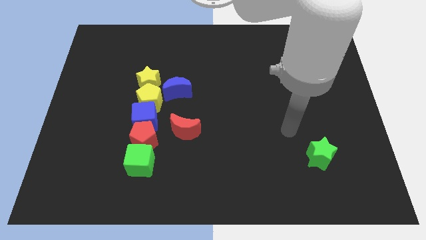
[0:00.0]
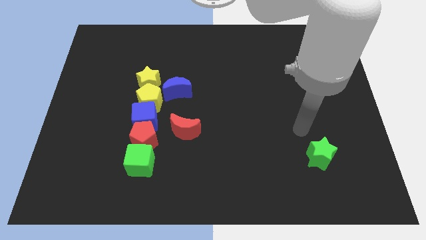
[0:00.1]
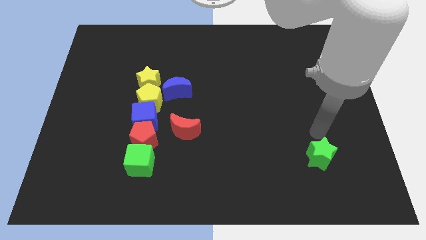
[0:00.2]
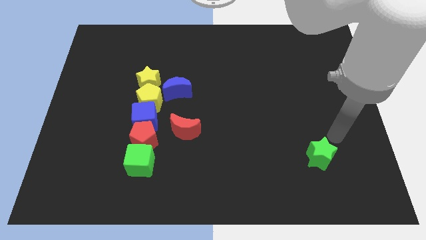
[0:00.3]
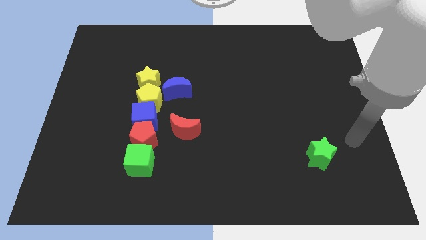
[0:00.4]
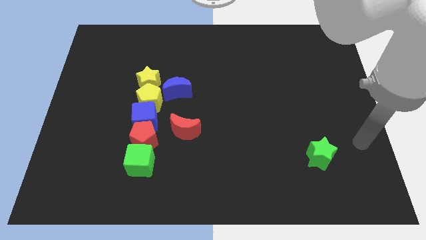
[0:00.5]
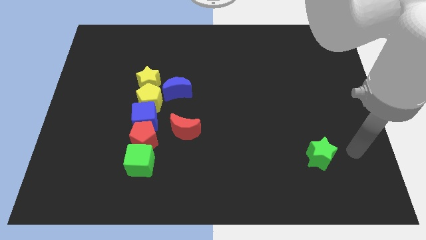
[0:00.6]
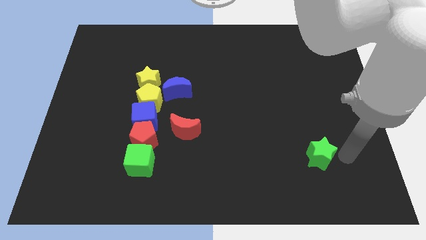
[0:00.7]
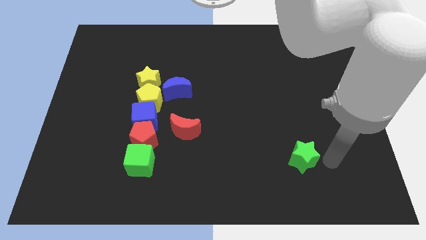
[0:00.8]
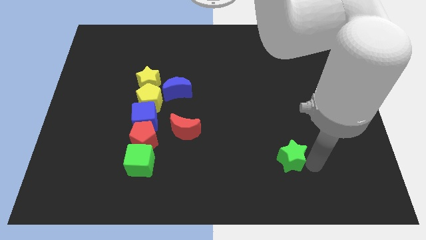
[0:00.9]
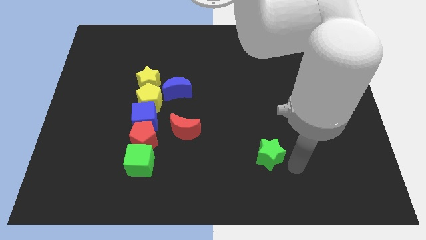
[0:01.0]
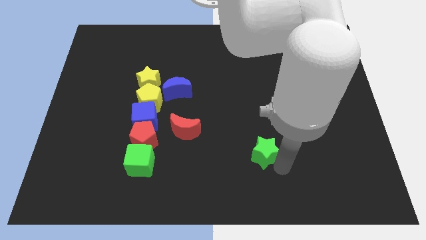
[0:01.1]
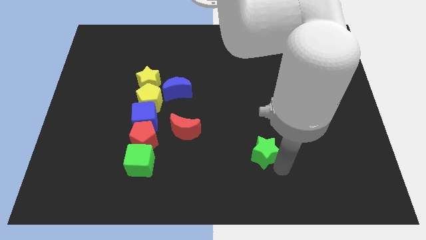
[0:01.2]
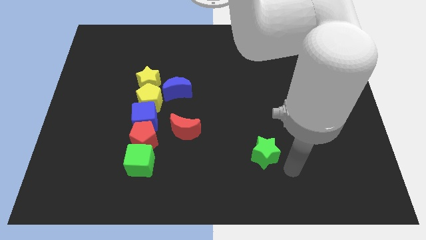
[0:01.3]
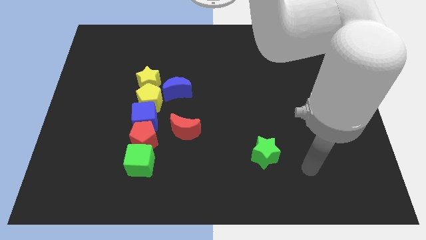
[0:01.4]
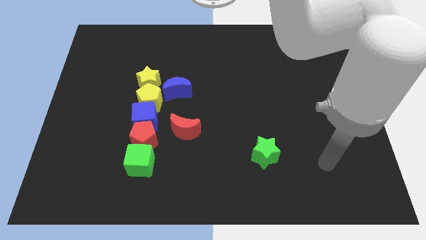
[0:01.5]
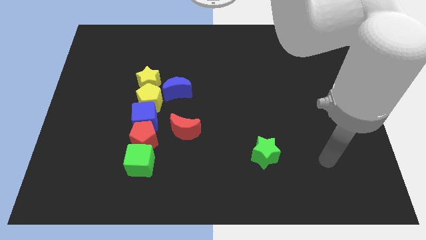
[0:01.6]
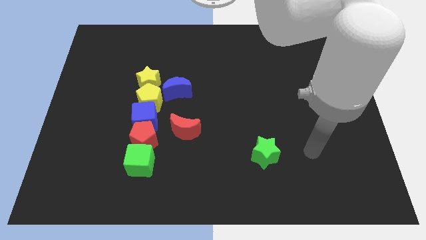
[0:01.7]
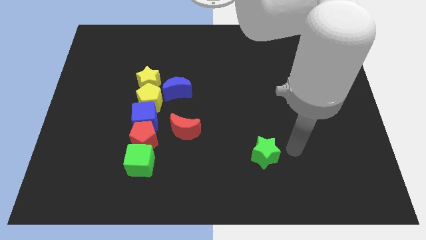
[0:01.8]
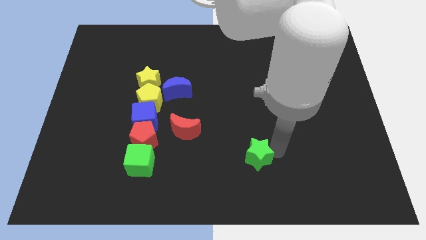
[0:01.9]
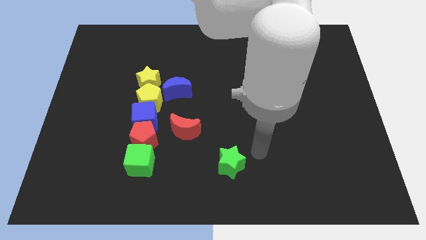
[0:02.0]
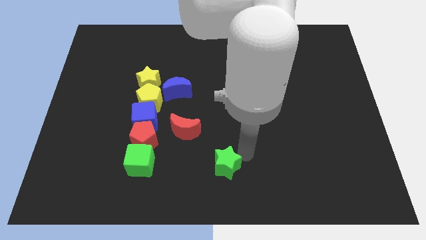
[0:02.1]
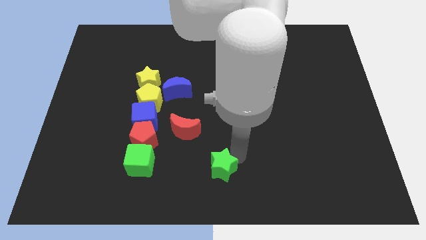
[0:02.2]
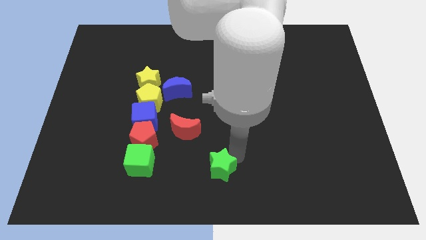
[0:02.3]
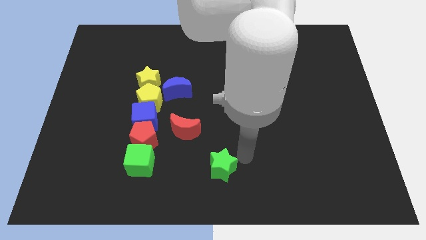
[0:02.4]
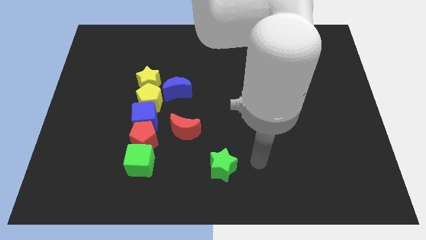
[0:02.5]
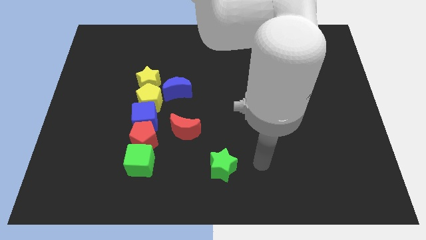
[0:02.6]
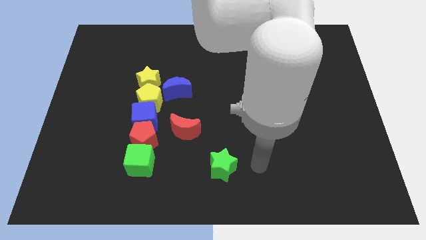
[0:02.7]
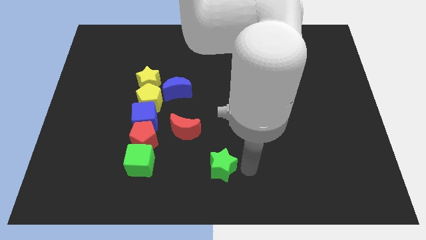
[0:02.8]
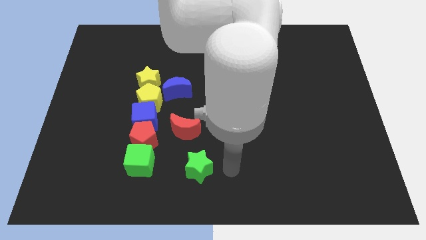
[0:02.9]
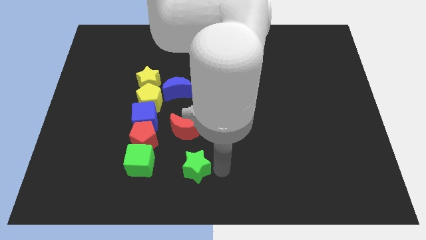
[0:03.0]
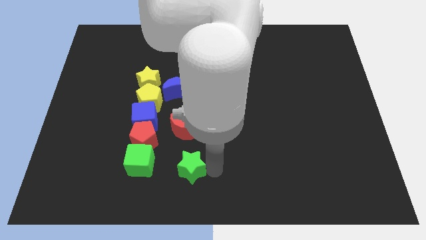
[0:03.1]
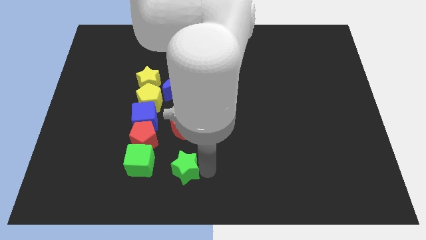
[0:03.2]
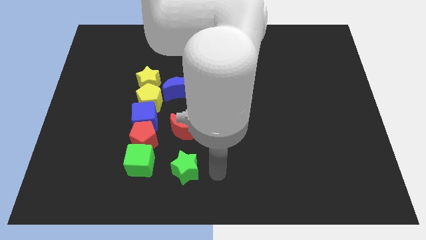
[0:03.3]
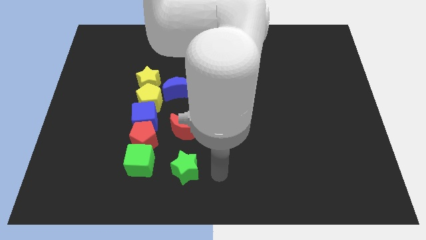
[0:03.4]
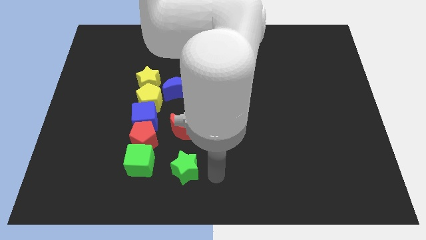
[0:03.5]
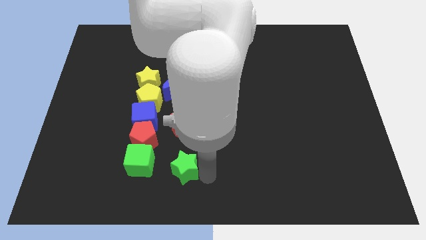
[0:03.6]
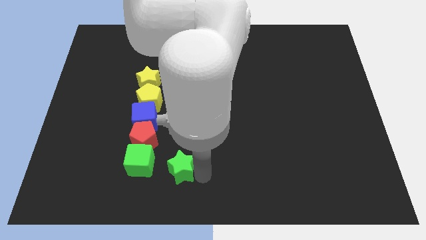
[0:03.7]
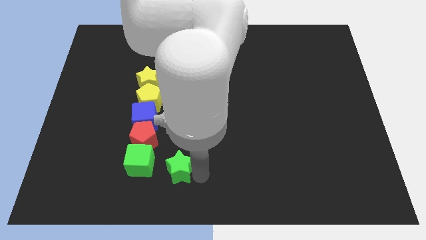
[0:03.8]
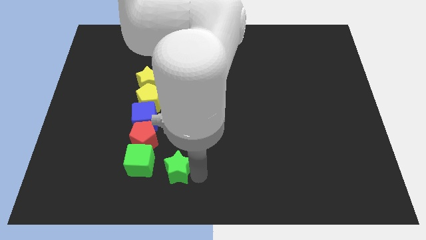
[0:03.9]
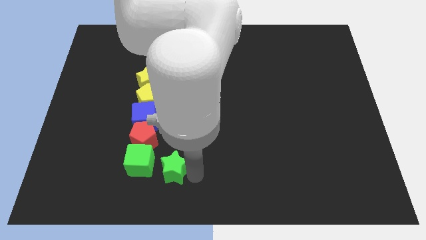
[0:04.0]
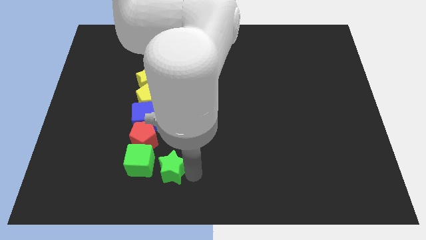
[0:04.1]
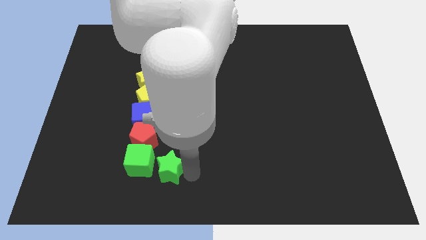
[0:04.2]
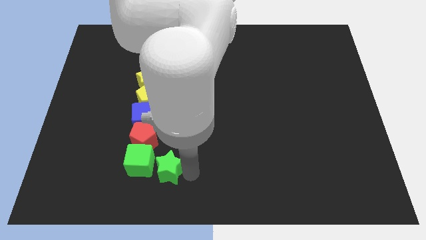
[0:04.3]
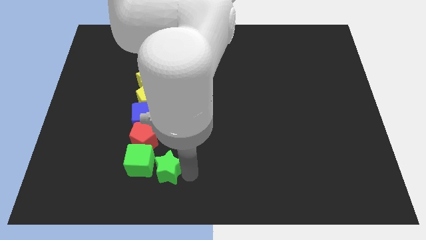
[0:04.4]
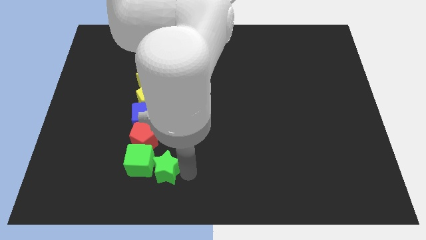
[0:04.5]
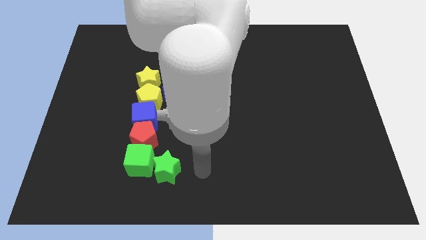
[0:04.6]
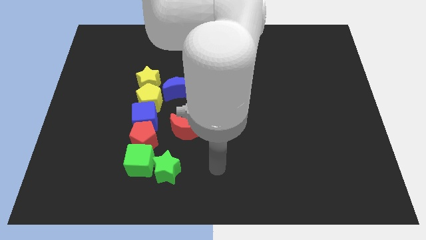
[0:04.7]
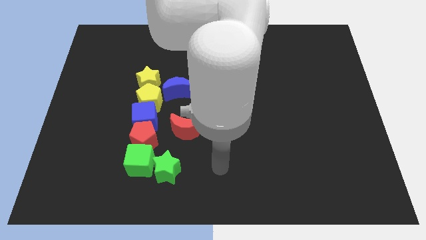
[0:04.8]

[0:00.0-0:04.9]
place the green star towards the right side of the green cube

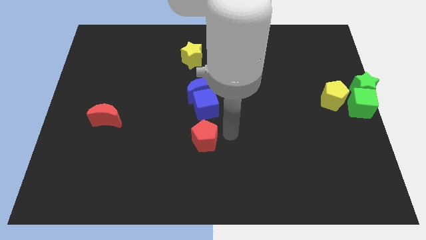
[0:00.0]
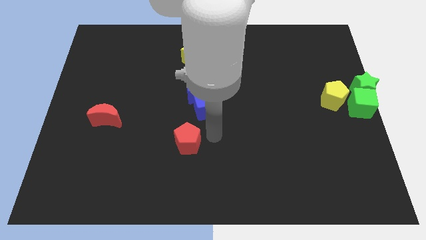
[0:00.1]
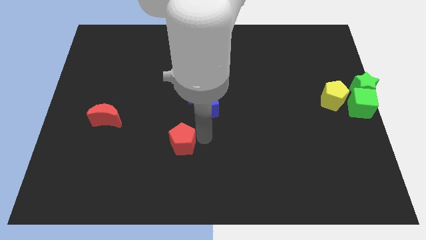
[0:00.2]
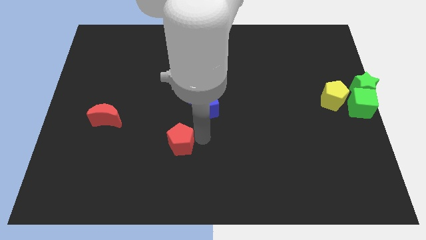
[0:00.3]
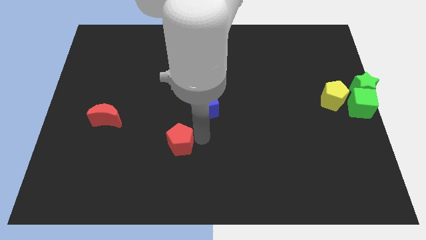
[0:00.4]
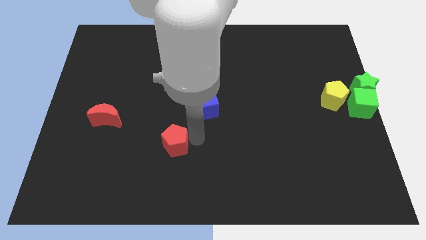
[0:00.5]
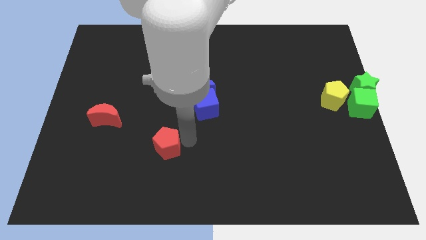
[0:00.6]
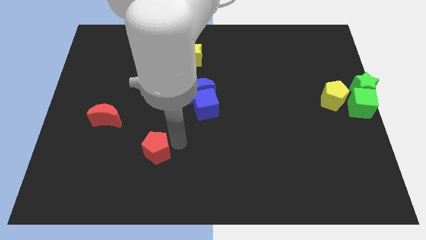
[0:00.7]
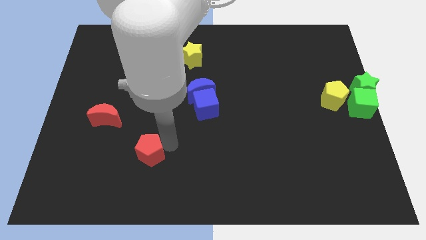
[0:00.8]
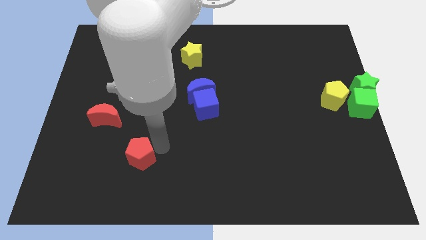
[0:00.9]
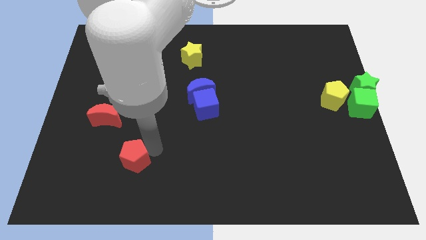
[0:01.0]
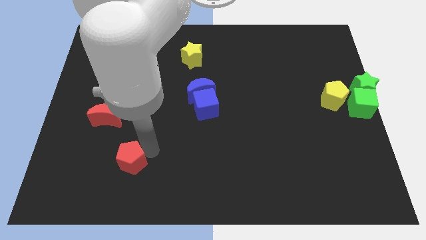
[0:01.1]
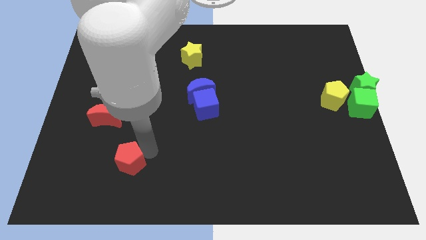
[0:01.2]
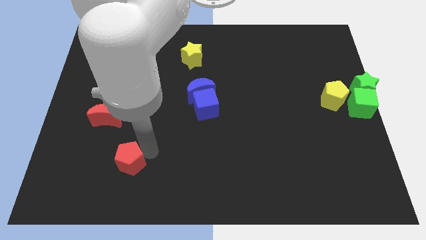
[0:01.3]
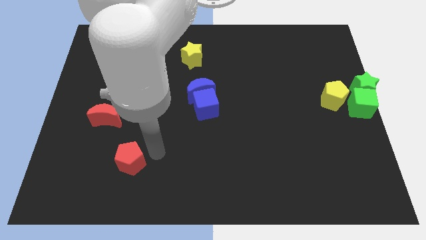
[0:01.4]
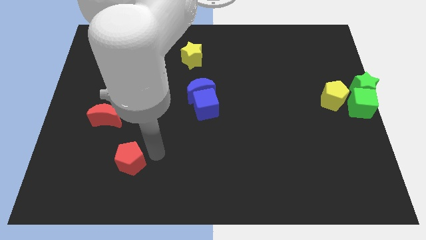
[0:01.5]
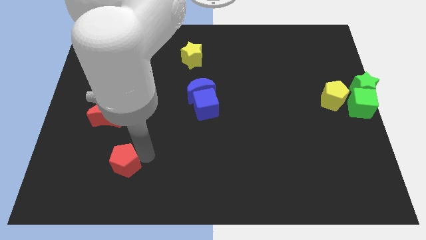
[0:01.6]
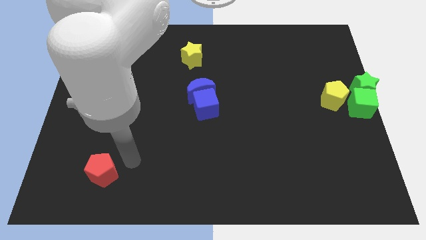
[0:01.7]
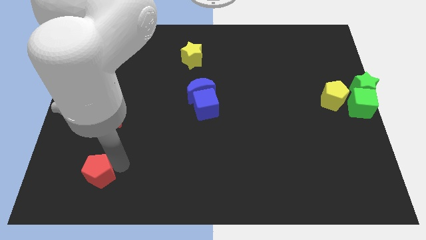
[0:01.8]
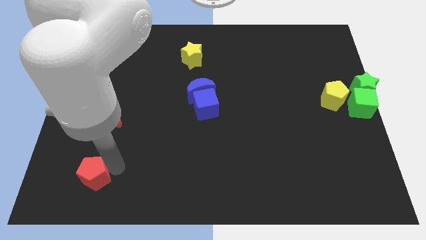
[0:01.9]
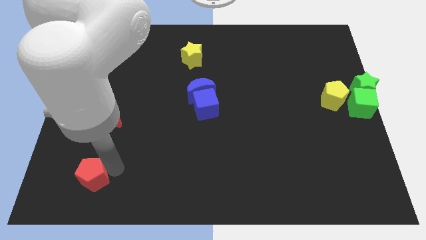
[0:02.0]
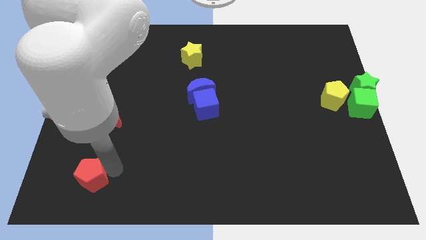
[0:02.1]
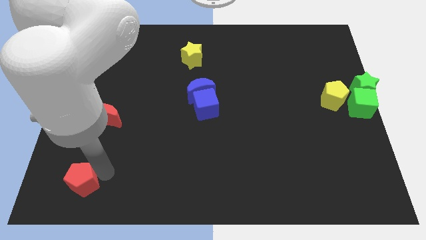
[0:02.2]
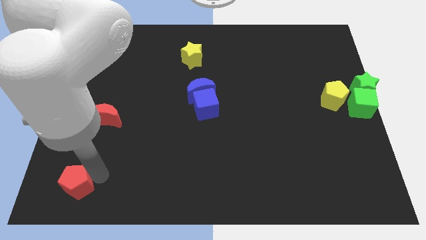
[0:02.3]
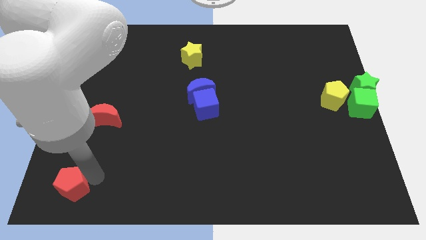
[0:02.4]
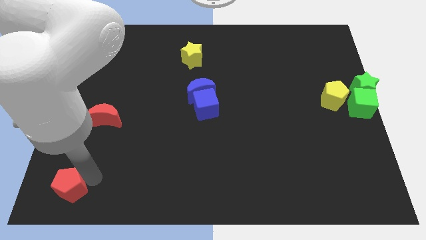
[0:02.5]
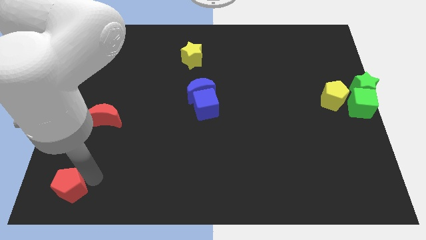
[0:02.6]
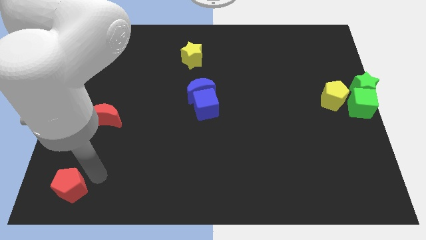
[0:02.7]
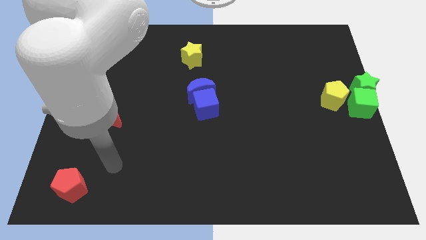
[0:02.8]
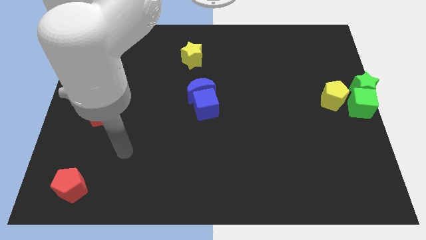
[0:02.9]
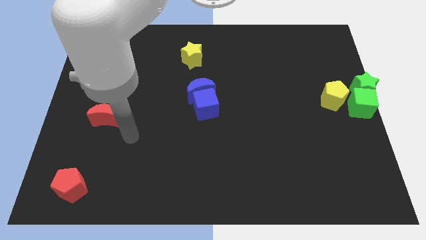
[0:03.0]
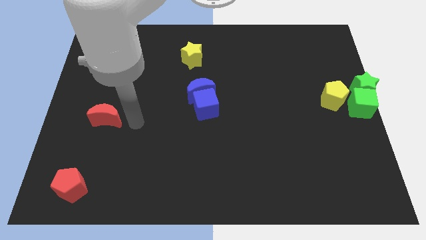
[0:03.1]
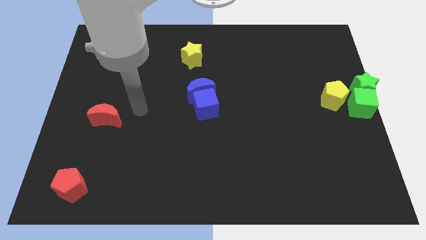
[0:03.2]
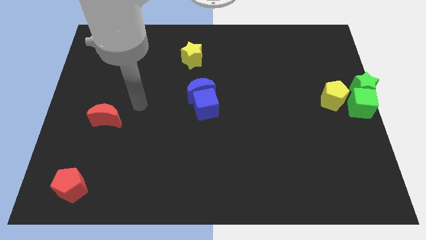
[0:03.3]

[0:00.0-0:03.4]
move the red pentagon towards the bottom left corner of the board

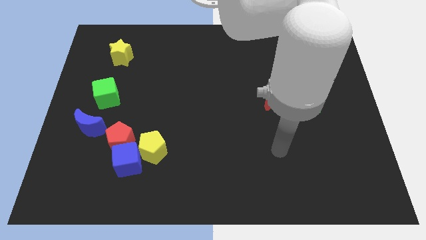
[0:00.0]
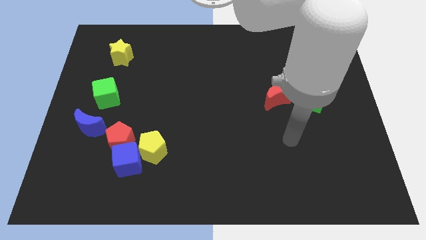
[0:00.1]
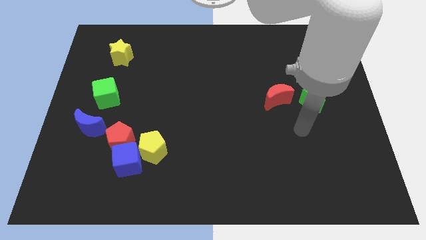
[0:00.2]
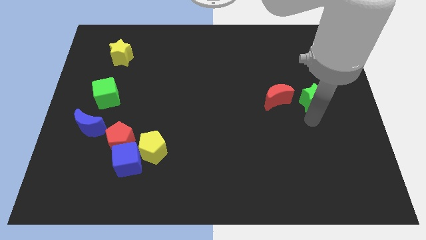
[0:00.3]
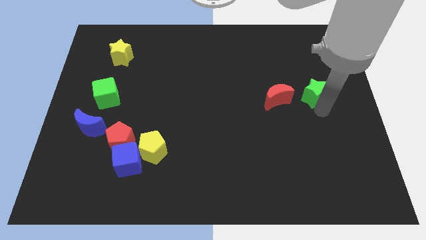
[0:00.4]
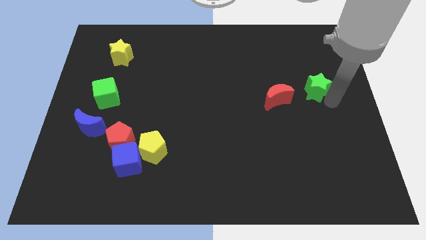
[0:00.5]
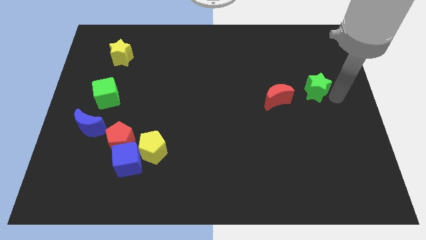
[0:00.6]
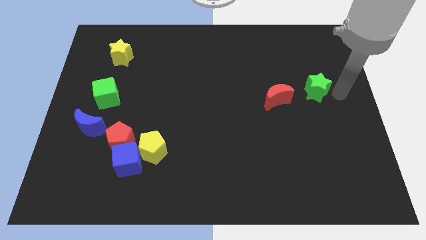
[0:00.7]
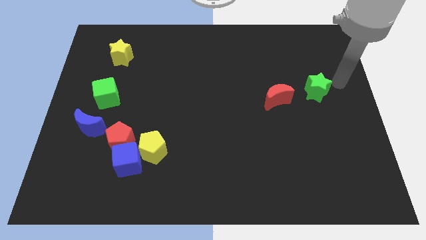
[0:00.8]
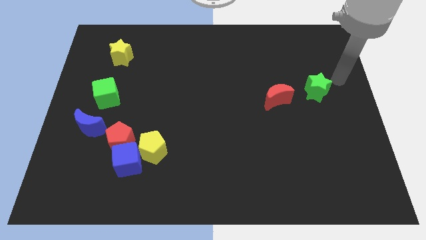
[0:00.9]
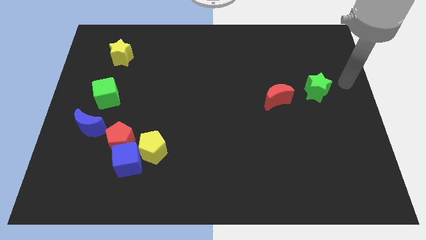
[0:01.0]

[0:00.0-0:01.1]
place the green star to the right side of red crescent
